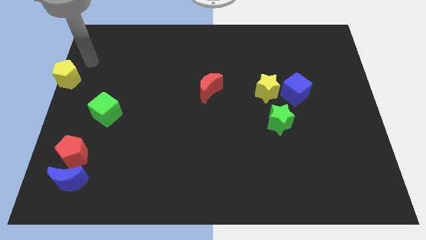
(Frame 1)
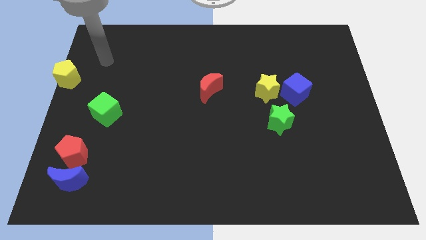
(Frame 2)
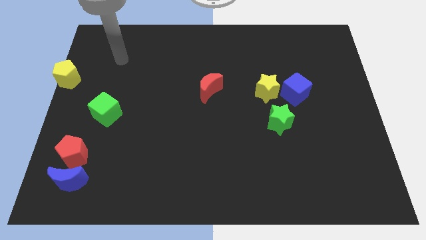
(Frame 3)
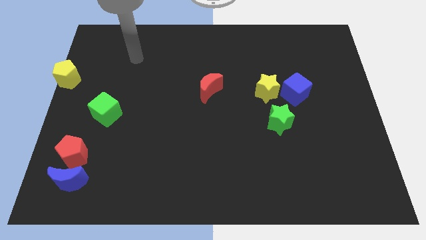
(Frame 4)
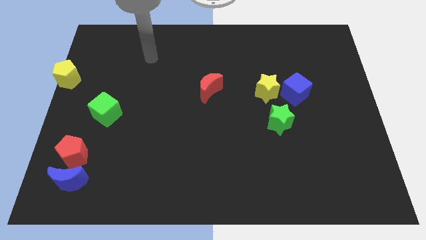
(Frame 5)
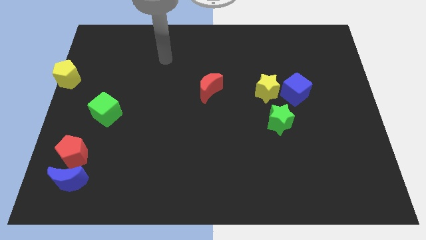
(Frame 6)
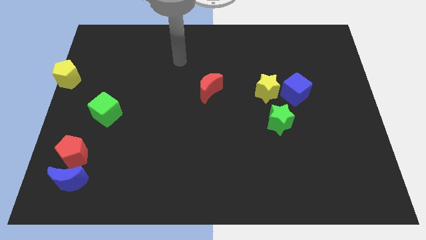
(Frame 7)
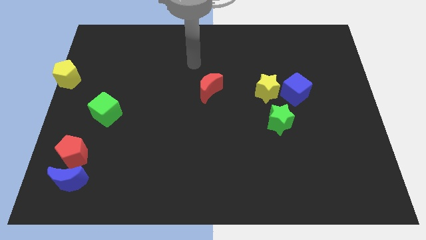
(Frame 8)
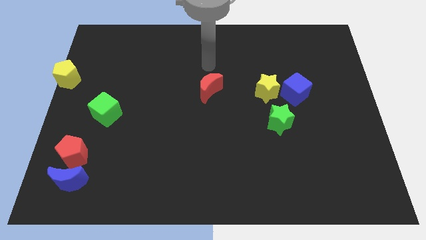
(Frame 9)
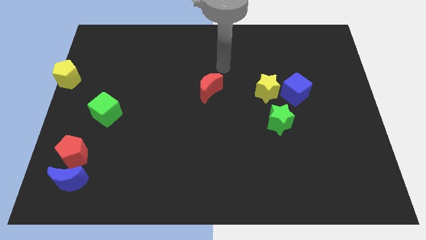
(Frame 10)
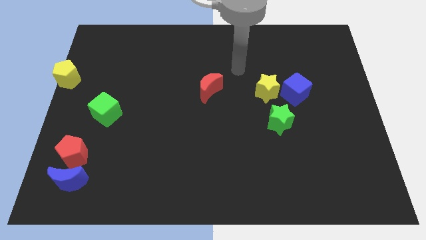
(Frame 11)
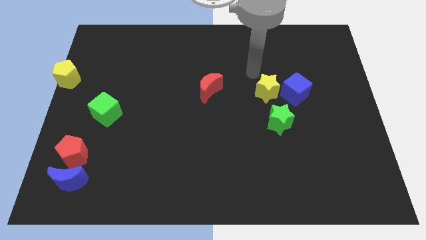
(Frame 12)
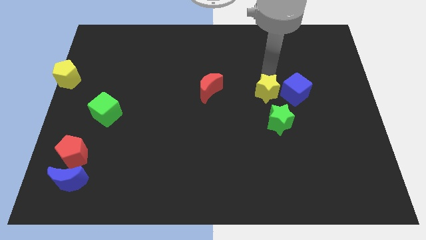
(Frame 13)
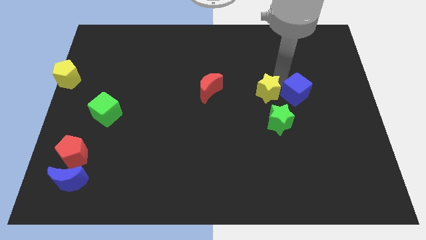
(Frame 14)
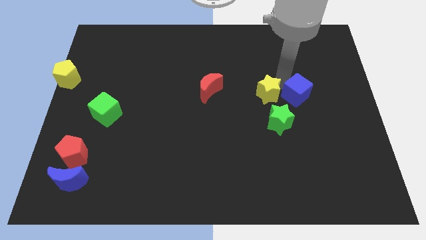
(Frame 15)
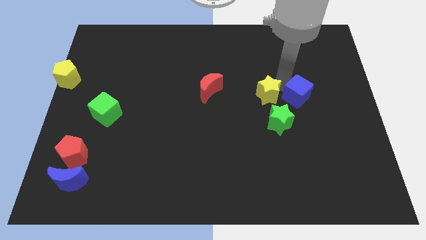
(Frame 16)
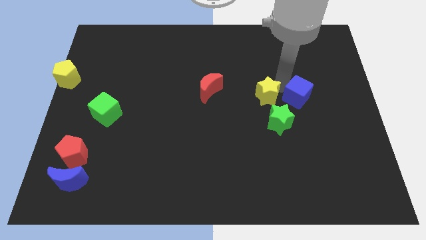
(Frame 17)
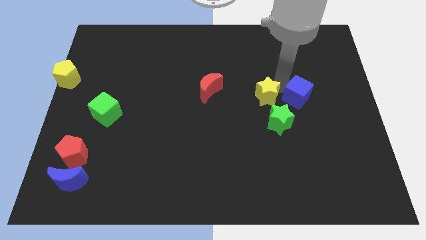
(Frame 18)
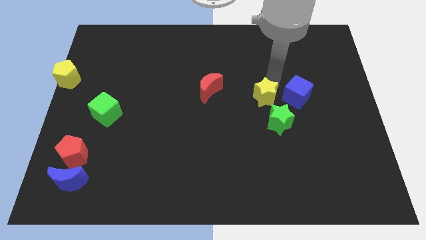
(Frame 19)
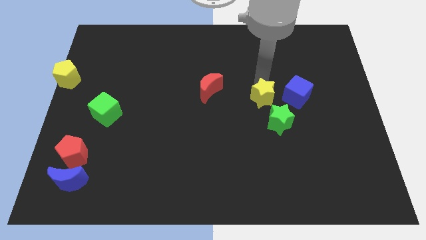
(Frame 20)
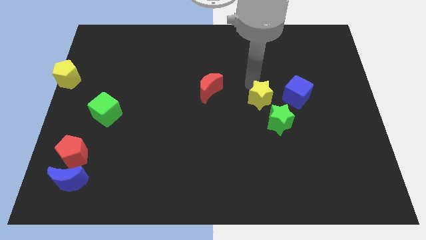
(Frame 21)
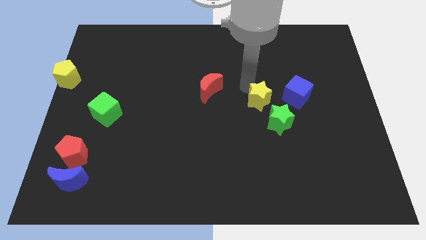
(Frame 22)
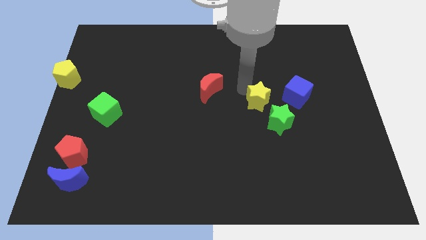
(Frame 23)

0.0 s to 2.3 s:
push the yellow star slightly to the bottom

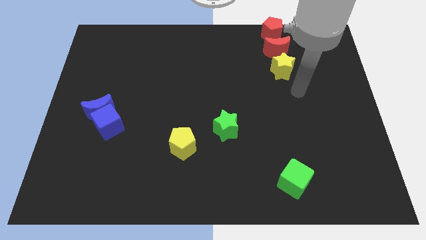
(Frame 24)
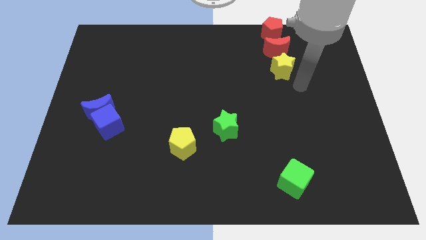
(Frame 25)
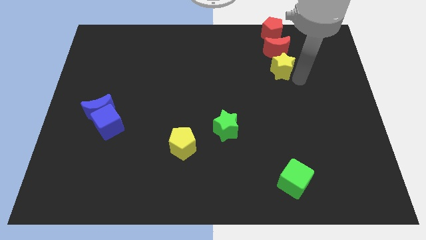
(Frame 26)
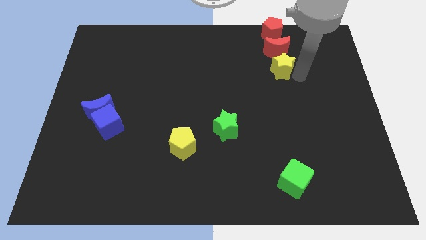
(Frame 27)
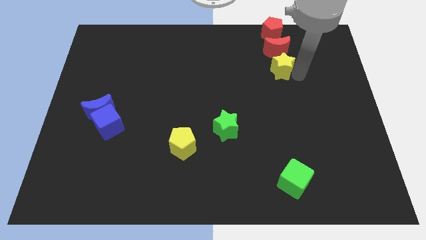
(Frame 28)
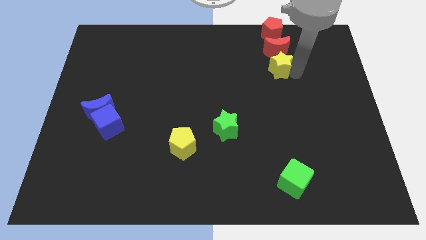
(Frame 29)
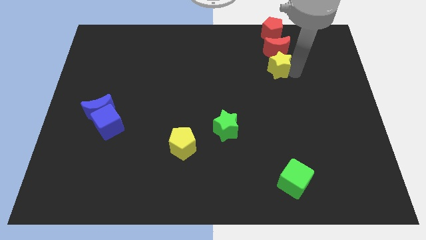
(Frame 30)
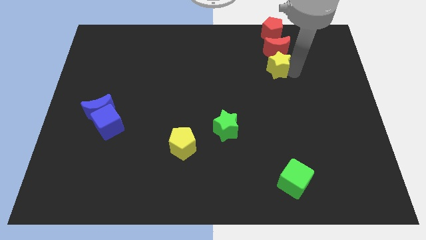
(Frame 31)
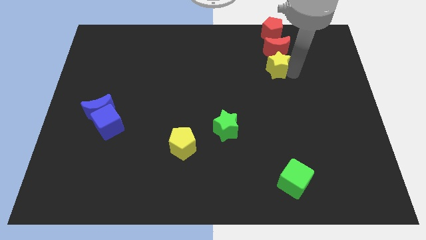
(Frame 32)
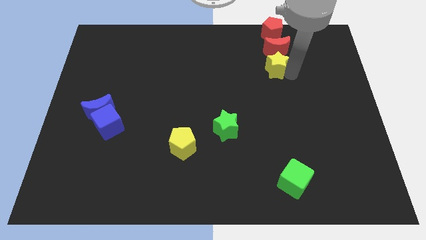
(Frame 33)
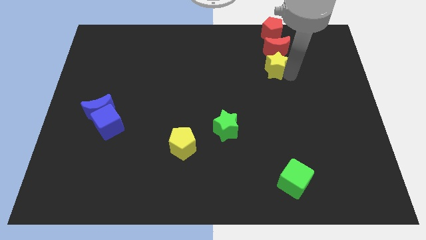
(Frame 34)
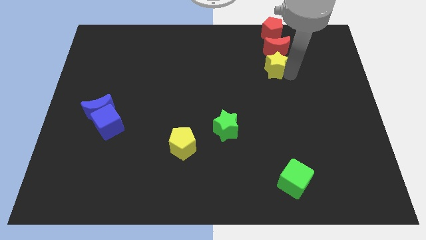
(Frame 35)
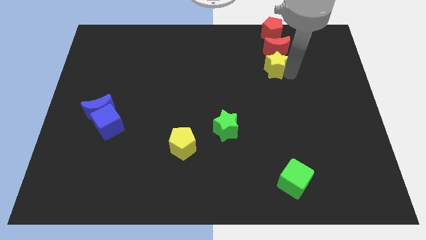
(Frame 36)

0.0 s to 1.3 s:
push the yellow star slightly to the left

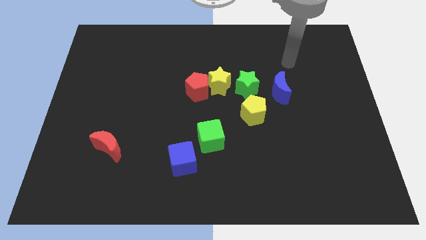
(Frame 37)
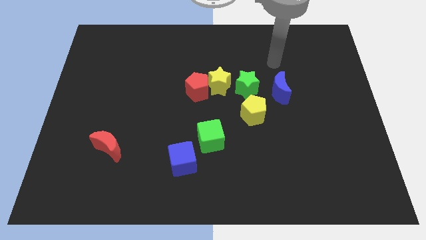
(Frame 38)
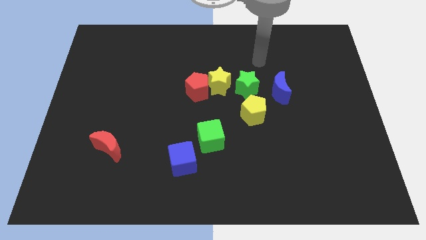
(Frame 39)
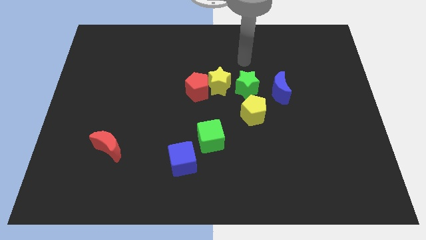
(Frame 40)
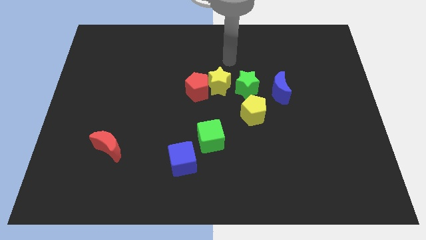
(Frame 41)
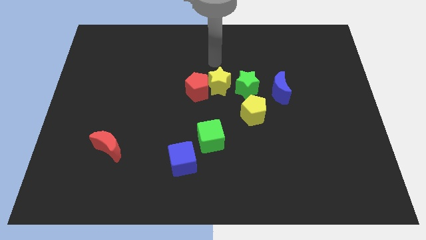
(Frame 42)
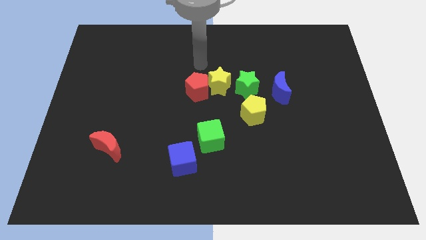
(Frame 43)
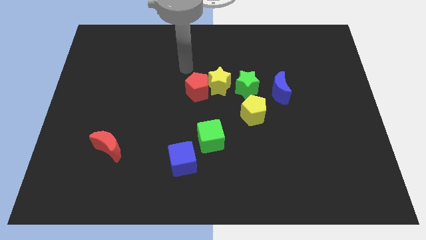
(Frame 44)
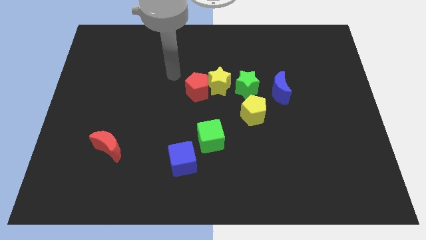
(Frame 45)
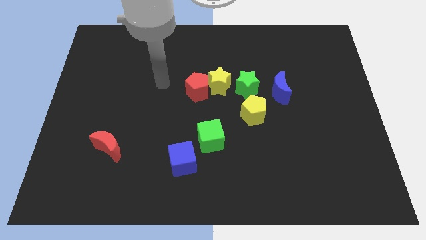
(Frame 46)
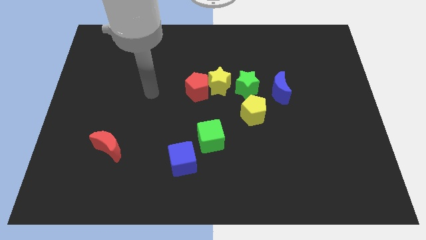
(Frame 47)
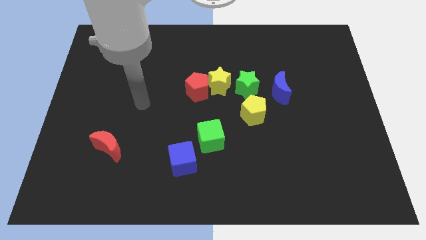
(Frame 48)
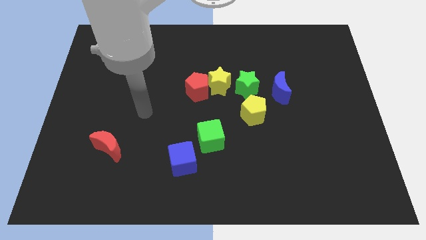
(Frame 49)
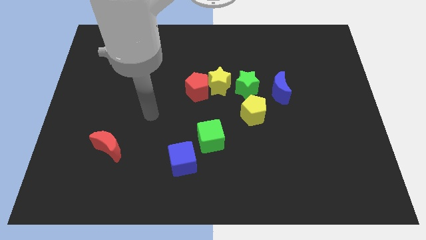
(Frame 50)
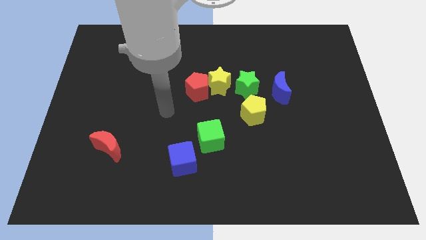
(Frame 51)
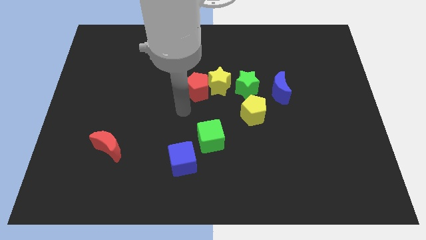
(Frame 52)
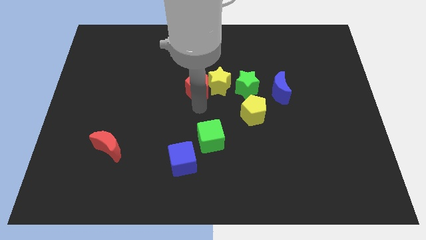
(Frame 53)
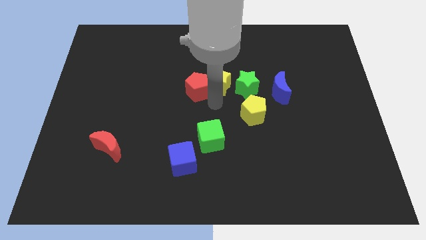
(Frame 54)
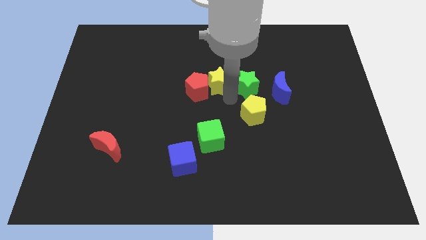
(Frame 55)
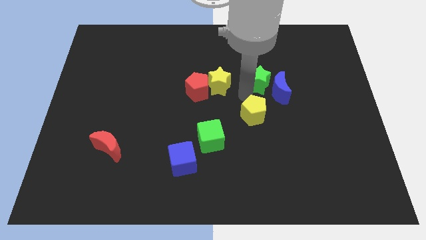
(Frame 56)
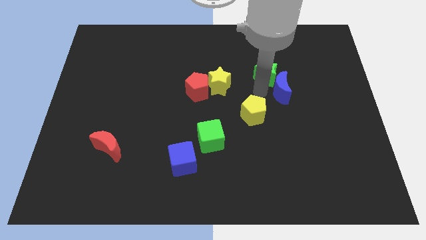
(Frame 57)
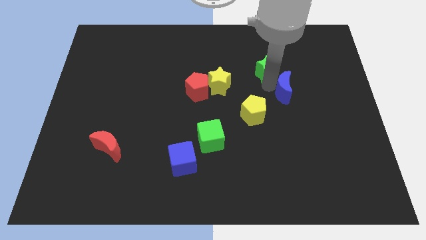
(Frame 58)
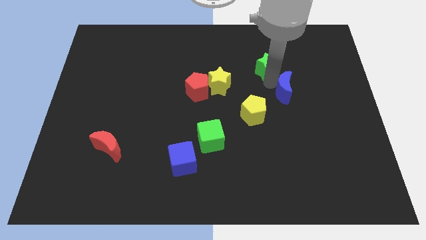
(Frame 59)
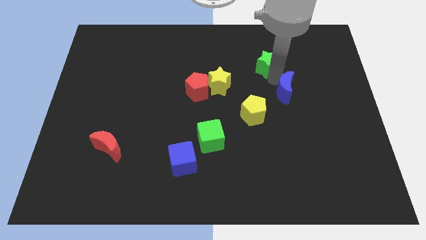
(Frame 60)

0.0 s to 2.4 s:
push the green star into the blue moon

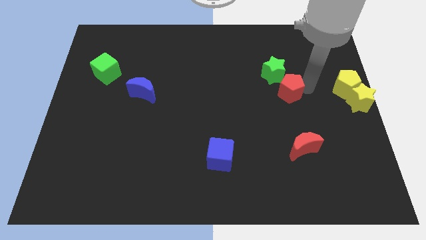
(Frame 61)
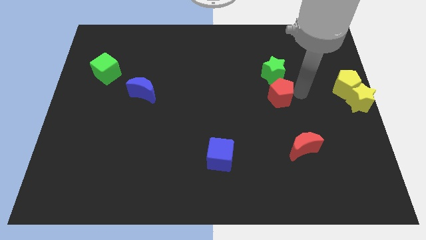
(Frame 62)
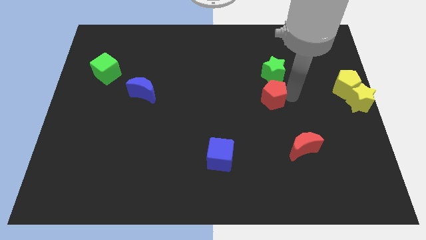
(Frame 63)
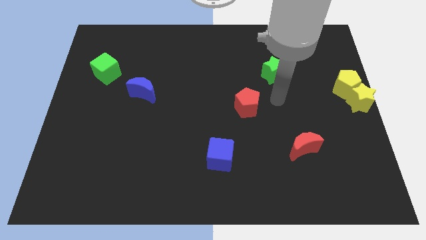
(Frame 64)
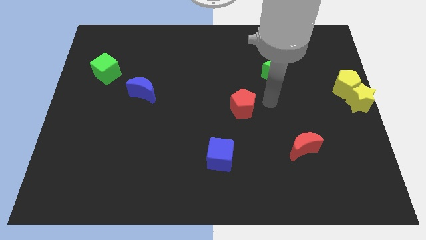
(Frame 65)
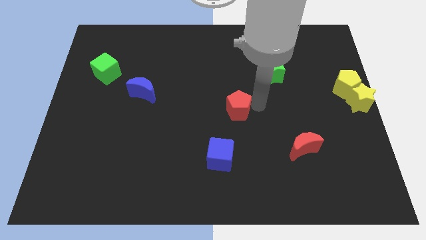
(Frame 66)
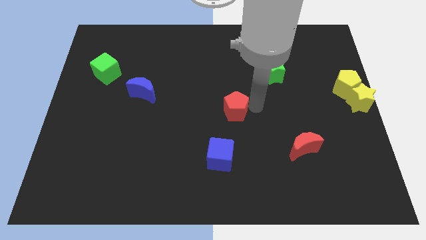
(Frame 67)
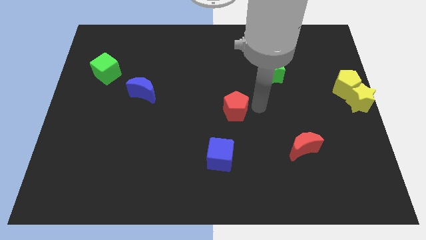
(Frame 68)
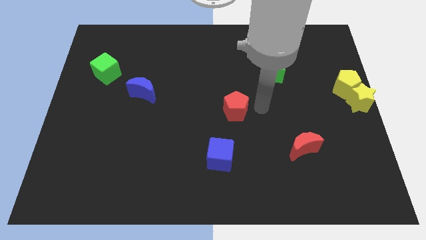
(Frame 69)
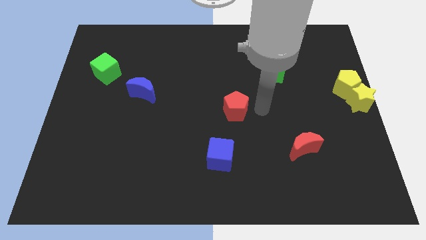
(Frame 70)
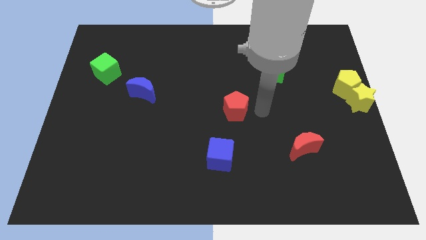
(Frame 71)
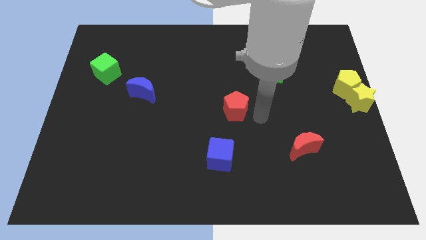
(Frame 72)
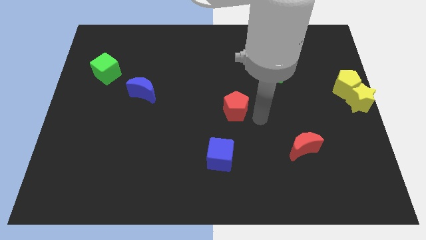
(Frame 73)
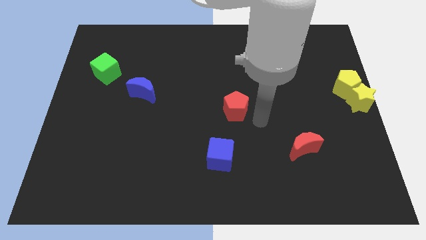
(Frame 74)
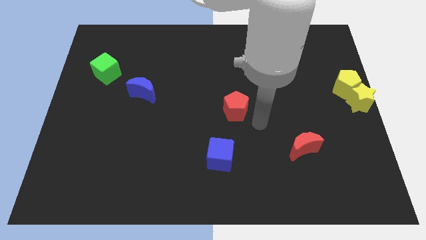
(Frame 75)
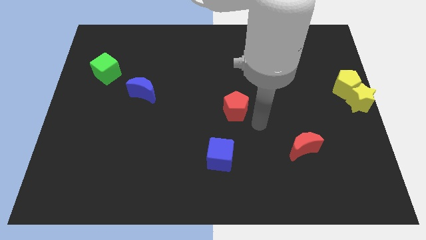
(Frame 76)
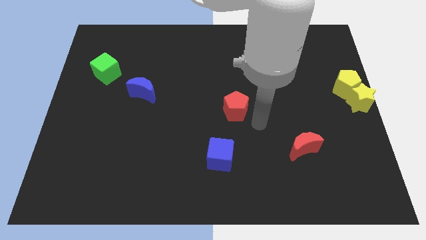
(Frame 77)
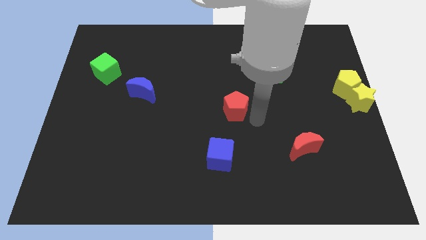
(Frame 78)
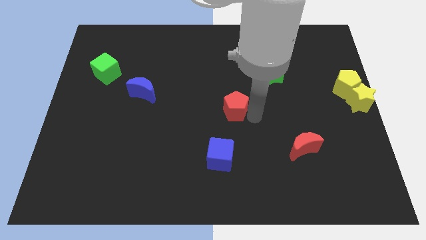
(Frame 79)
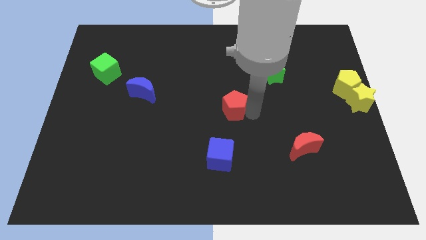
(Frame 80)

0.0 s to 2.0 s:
slide red pentagon to the top of blue cube

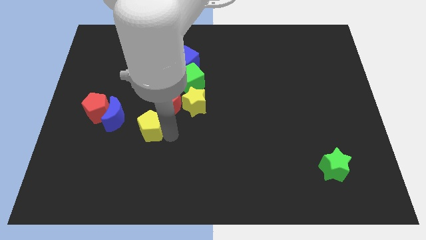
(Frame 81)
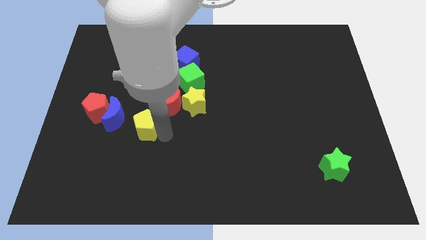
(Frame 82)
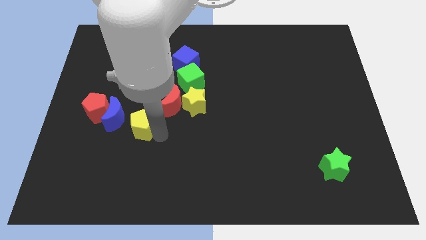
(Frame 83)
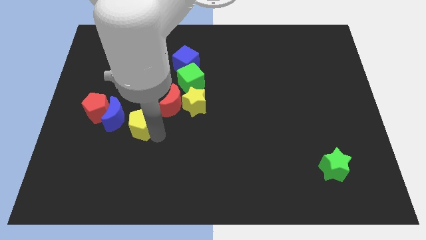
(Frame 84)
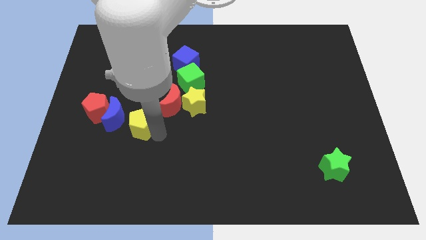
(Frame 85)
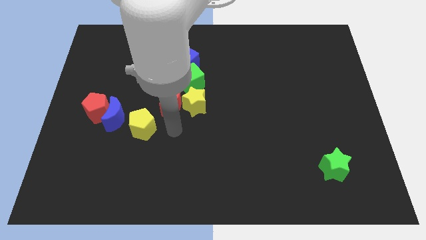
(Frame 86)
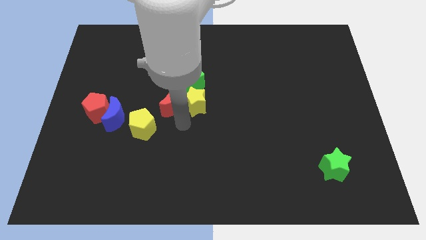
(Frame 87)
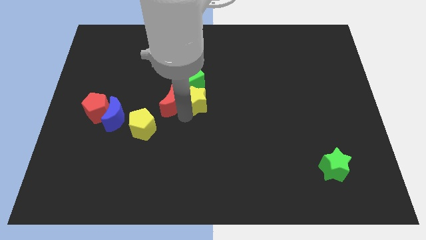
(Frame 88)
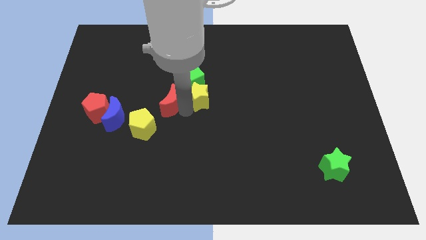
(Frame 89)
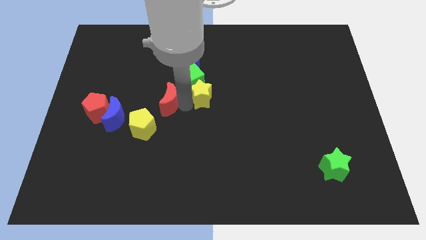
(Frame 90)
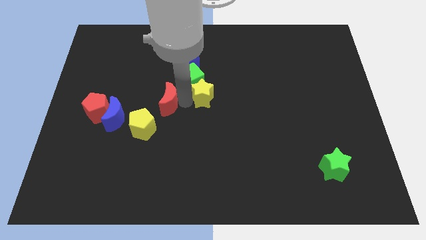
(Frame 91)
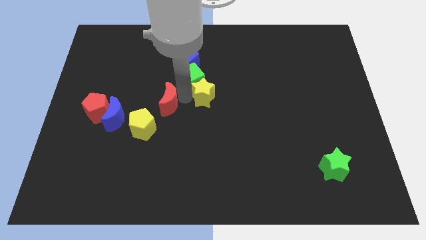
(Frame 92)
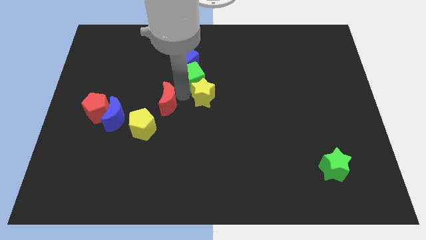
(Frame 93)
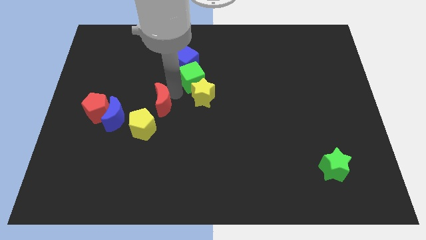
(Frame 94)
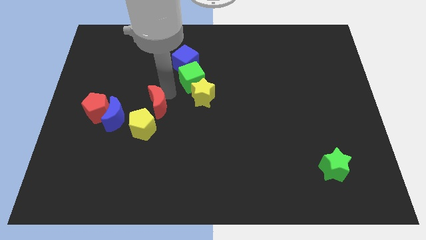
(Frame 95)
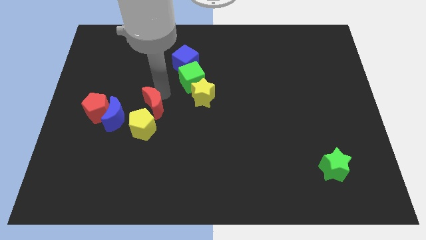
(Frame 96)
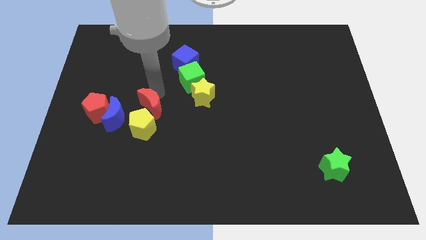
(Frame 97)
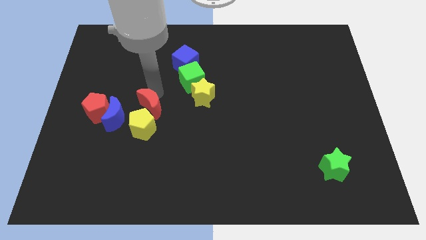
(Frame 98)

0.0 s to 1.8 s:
separate the red moon and yellow star
